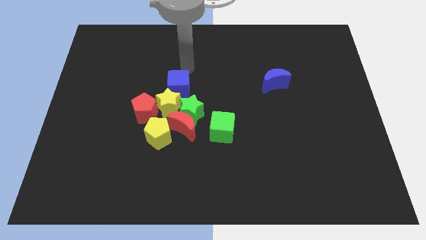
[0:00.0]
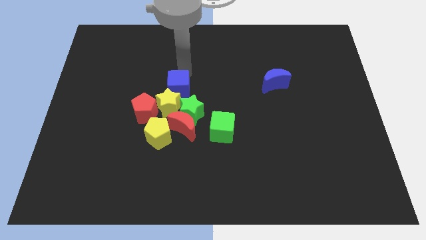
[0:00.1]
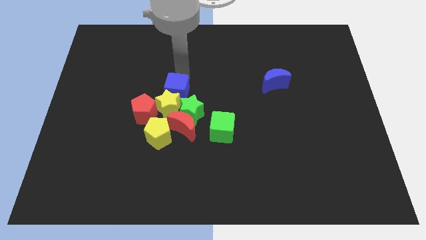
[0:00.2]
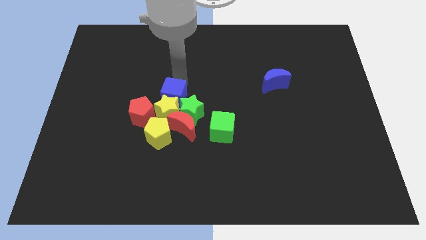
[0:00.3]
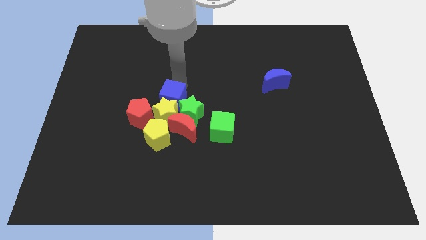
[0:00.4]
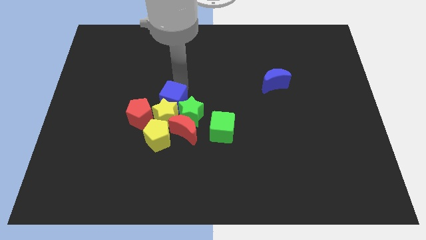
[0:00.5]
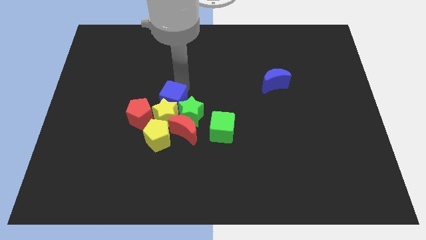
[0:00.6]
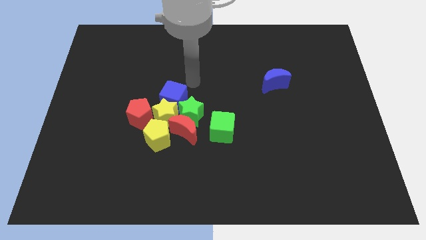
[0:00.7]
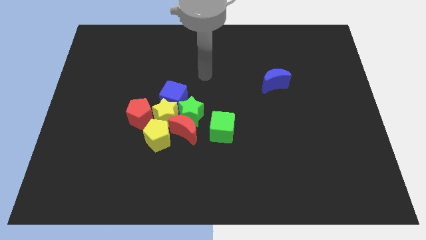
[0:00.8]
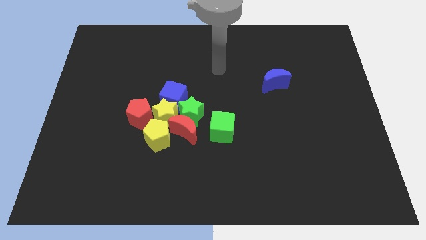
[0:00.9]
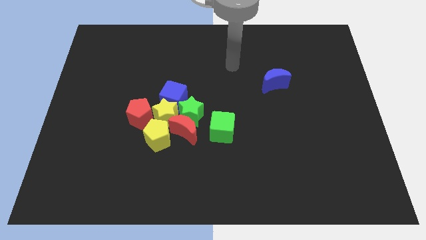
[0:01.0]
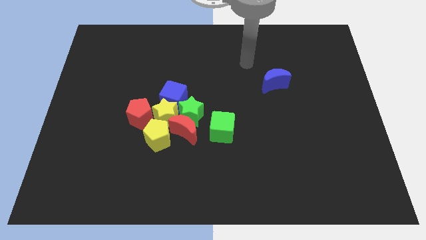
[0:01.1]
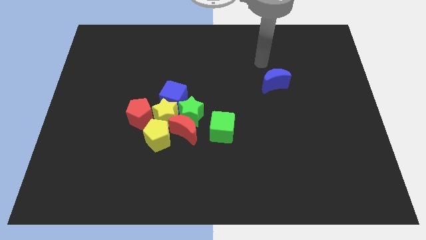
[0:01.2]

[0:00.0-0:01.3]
push the blue cube into the yellow star

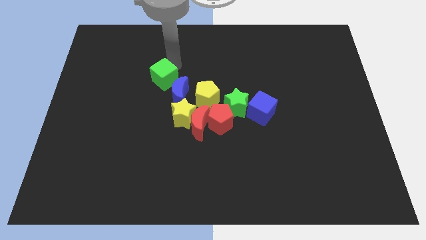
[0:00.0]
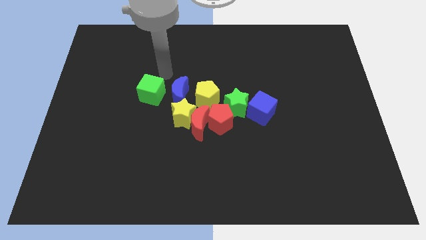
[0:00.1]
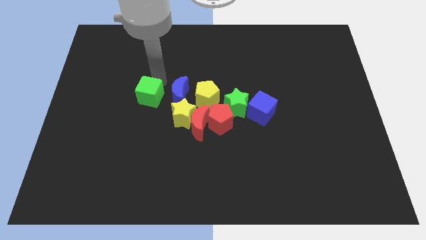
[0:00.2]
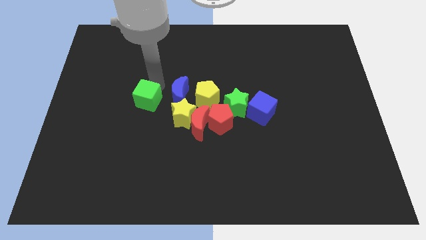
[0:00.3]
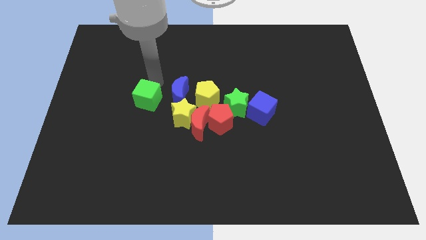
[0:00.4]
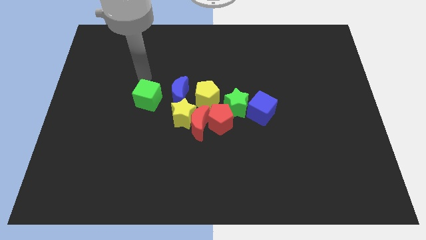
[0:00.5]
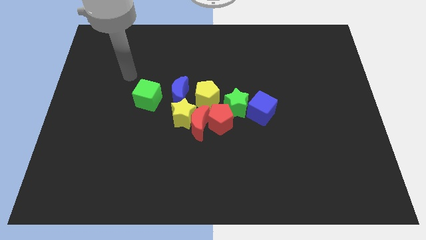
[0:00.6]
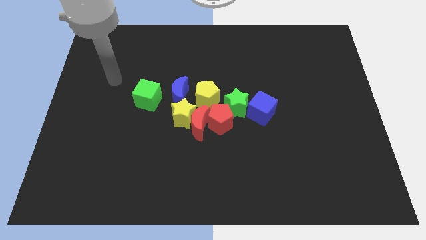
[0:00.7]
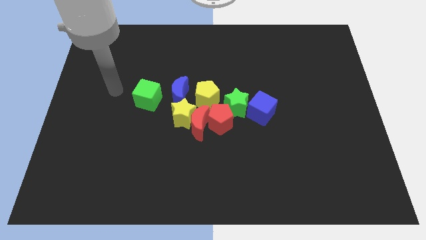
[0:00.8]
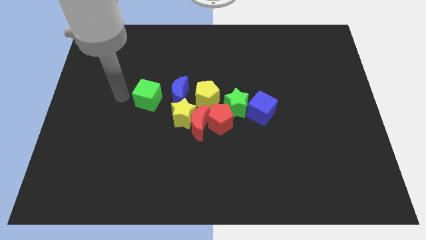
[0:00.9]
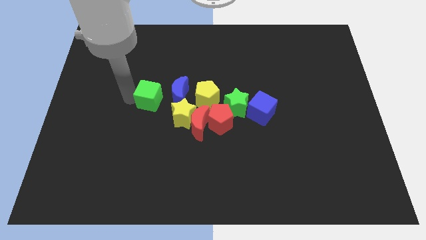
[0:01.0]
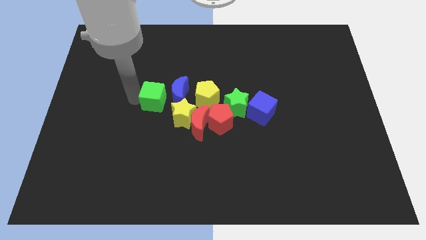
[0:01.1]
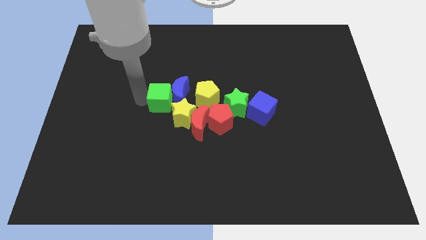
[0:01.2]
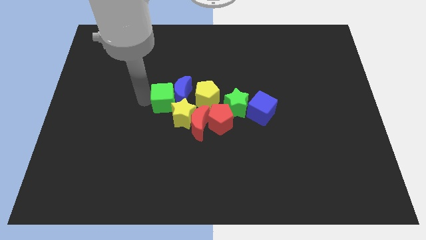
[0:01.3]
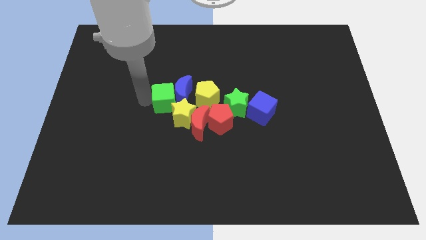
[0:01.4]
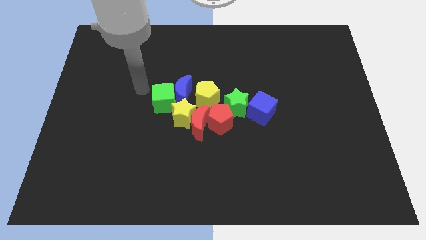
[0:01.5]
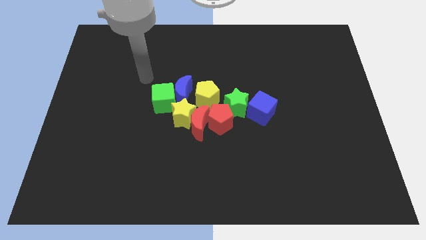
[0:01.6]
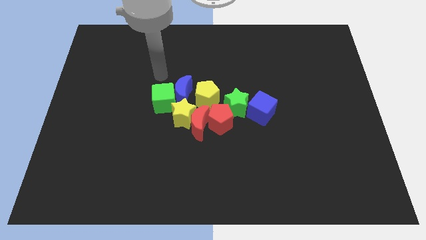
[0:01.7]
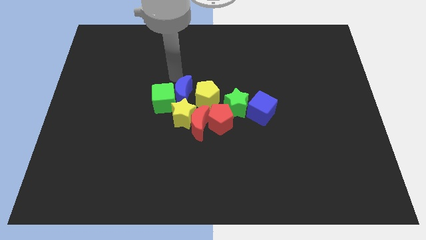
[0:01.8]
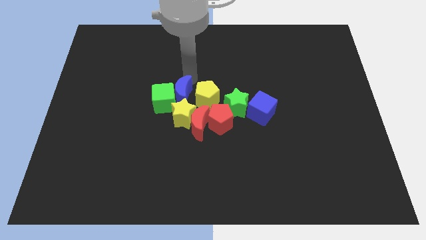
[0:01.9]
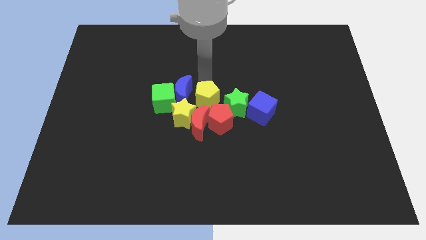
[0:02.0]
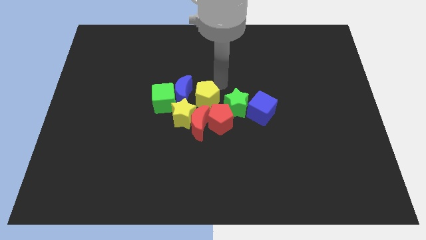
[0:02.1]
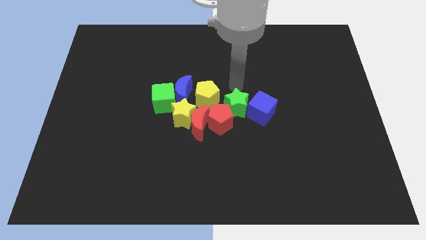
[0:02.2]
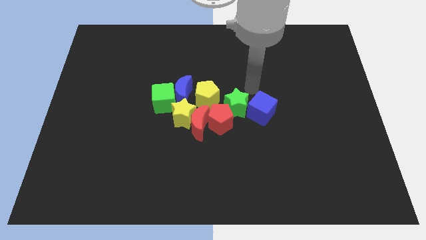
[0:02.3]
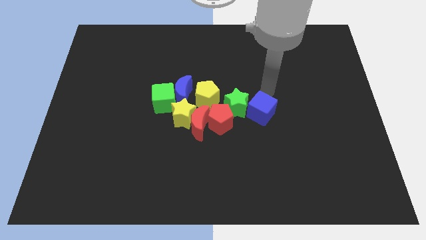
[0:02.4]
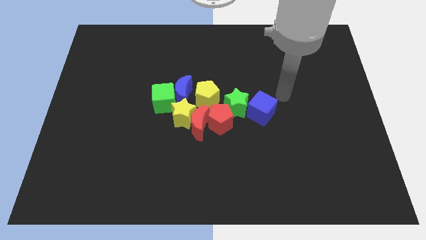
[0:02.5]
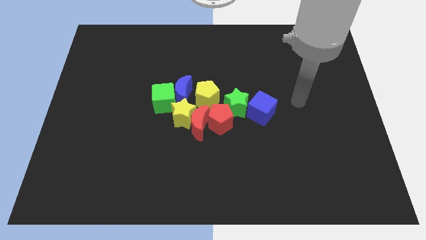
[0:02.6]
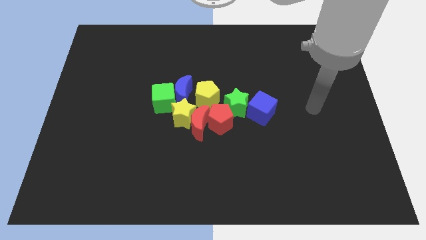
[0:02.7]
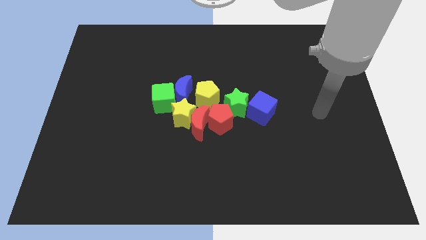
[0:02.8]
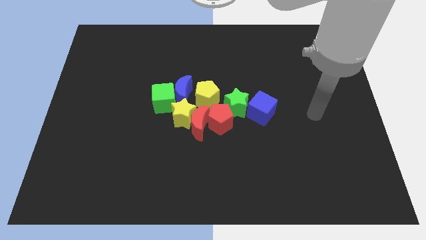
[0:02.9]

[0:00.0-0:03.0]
push the green cube into blue moon

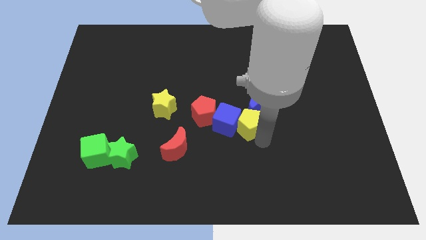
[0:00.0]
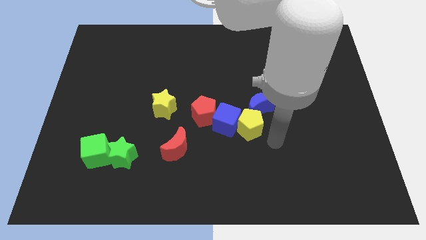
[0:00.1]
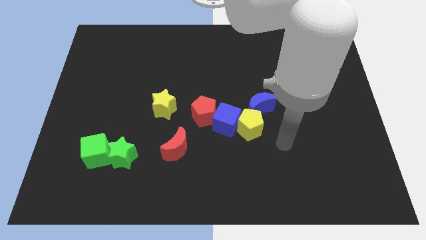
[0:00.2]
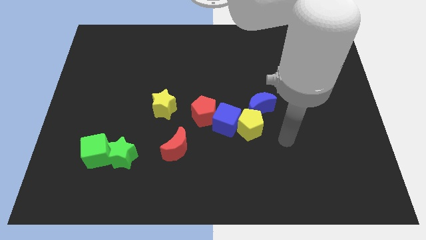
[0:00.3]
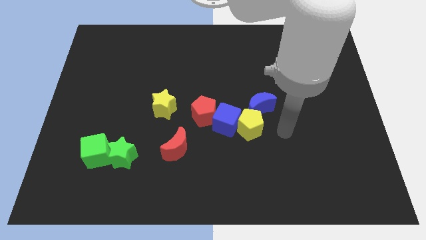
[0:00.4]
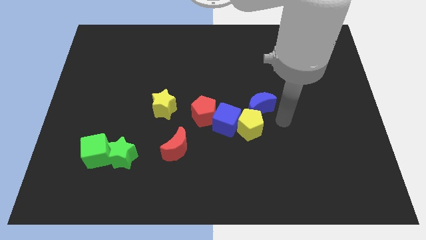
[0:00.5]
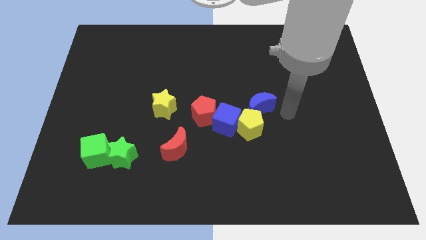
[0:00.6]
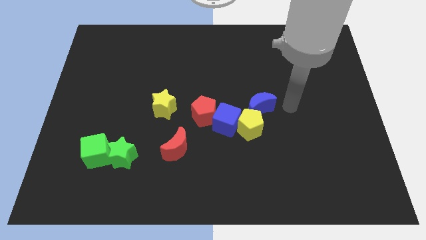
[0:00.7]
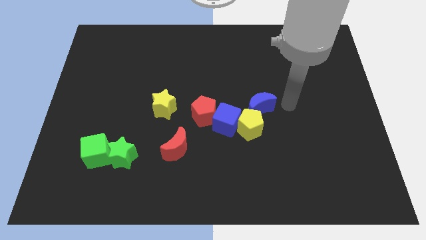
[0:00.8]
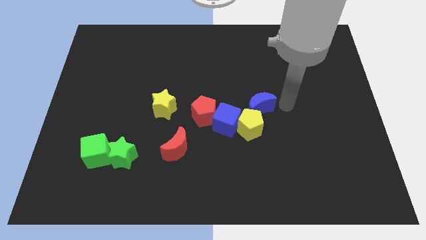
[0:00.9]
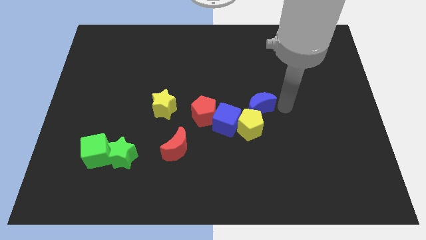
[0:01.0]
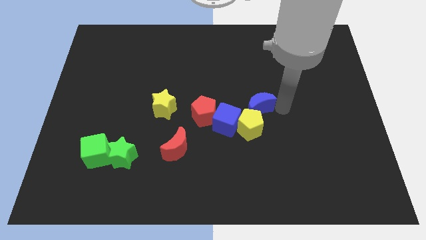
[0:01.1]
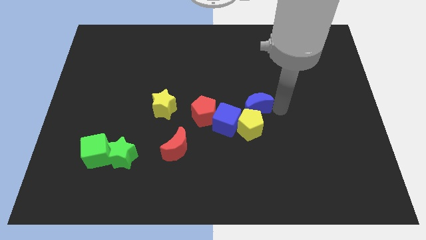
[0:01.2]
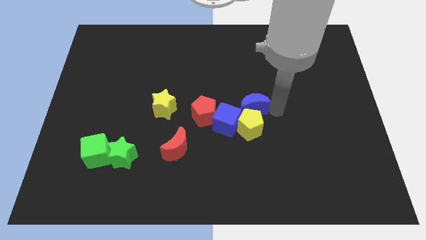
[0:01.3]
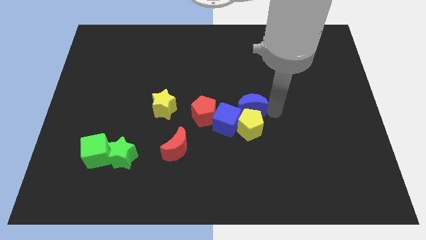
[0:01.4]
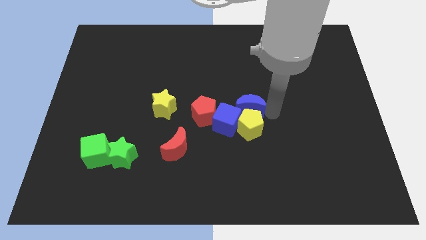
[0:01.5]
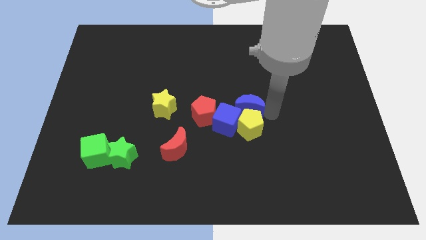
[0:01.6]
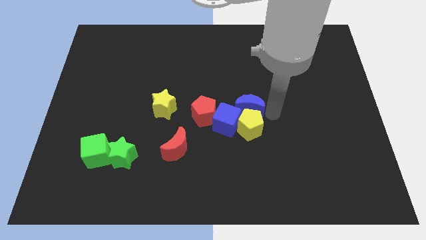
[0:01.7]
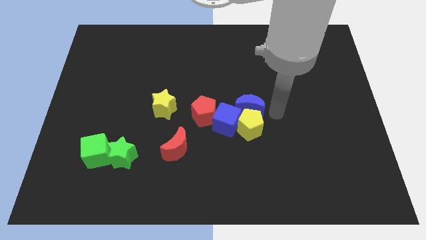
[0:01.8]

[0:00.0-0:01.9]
move the blue moon above the yellow pentagon

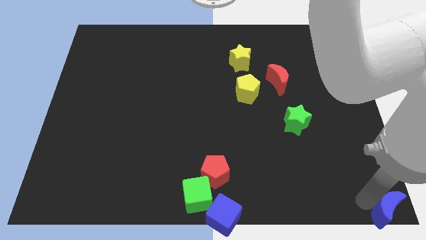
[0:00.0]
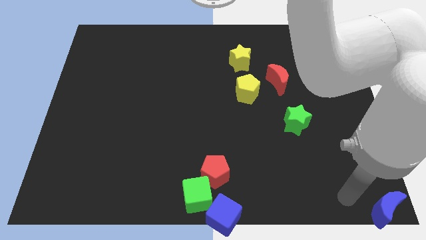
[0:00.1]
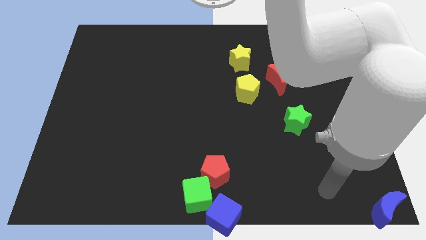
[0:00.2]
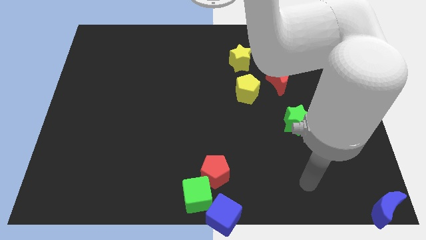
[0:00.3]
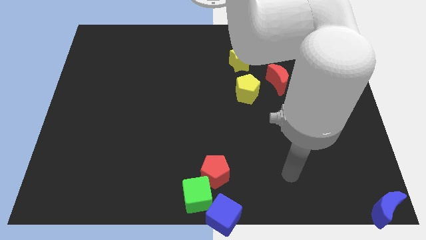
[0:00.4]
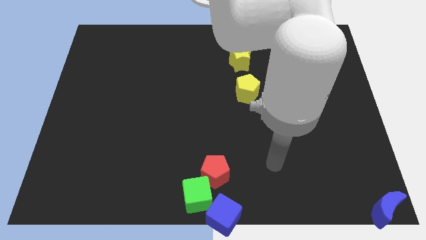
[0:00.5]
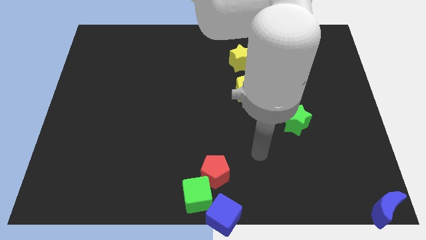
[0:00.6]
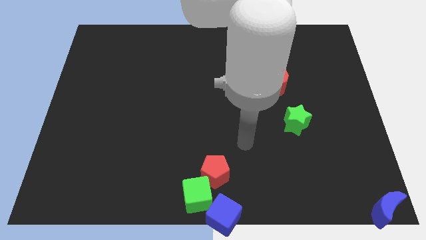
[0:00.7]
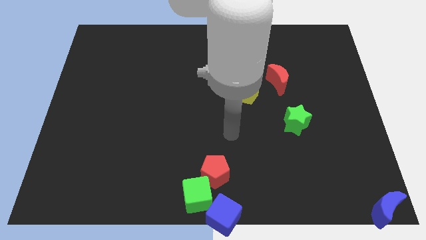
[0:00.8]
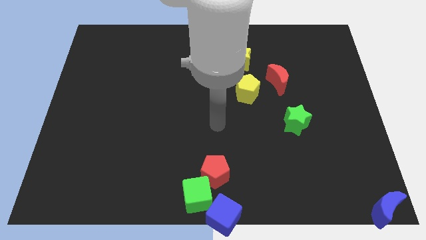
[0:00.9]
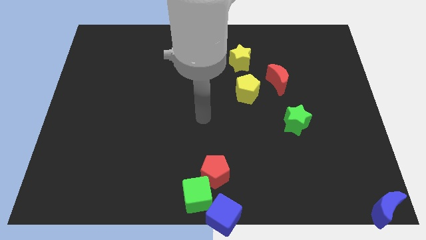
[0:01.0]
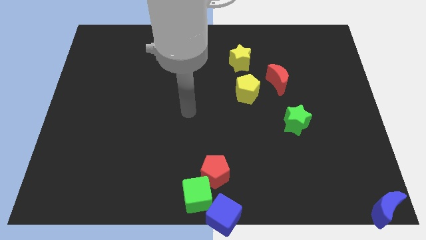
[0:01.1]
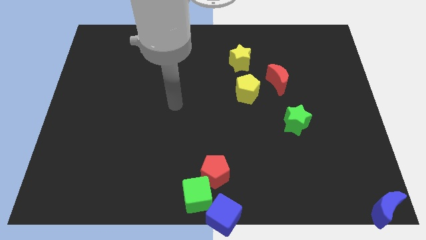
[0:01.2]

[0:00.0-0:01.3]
move your arm away from the blue crescent

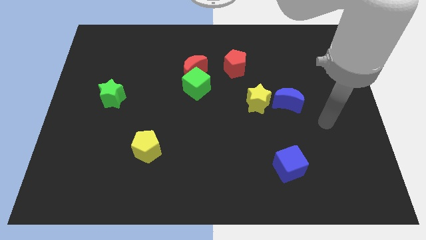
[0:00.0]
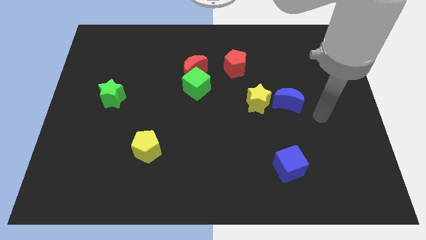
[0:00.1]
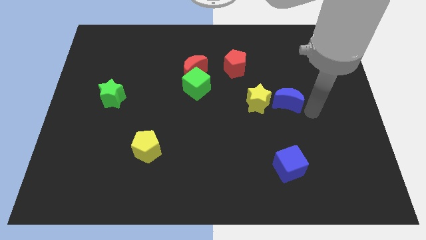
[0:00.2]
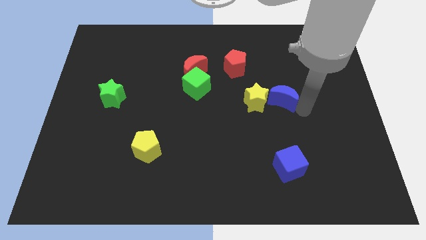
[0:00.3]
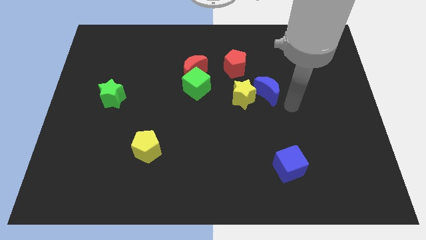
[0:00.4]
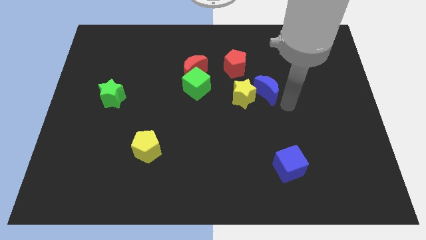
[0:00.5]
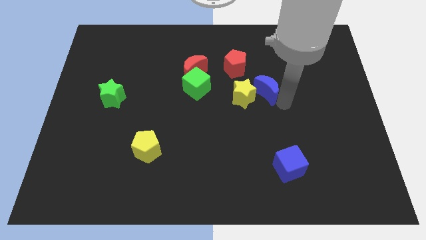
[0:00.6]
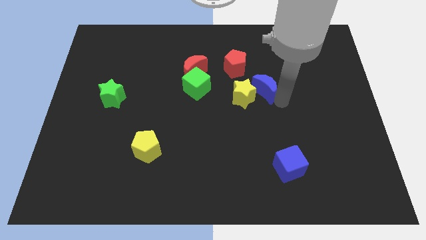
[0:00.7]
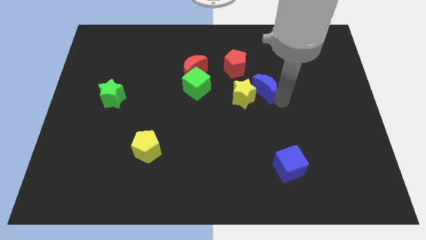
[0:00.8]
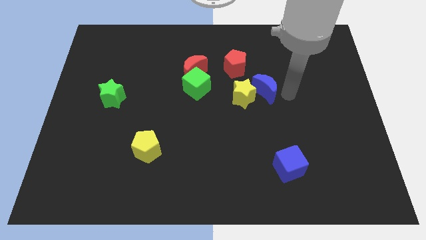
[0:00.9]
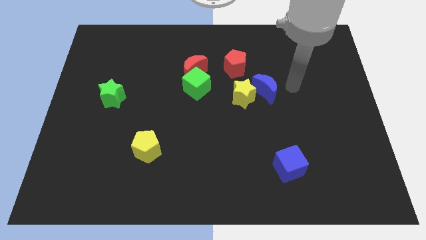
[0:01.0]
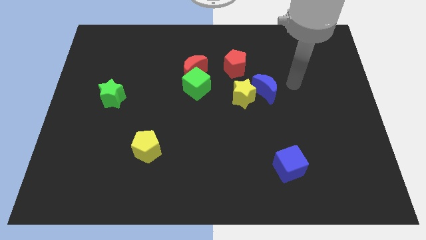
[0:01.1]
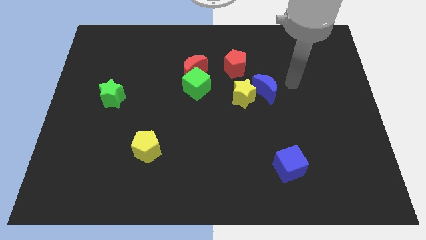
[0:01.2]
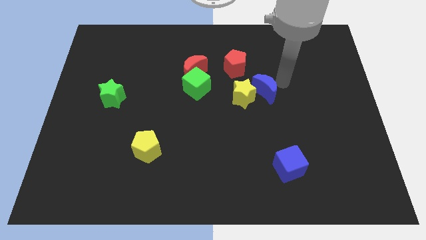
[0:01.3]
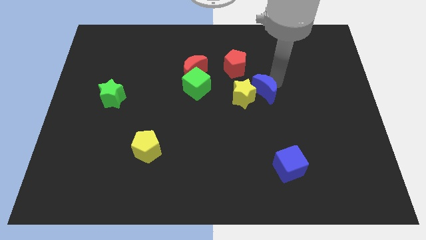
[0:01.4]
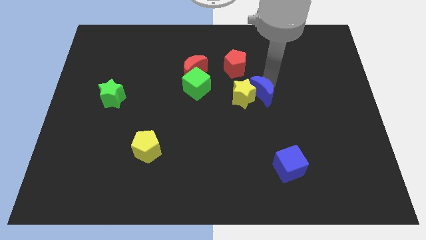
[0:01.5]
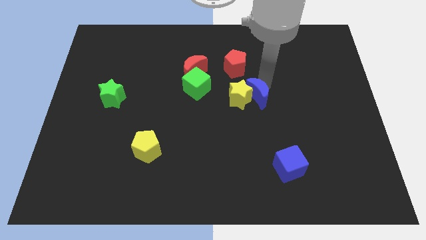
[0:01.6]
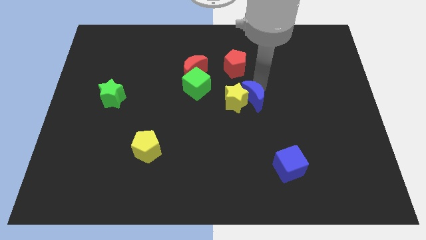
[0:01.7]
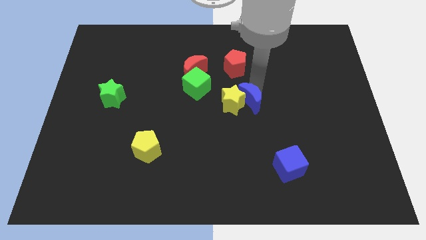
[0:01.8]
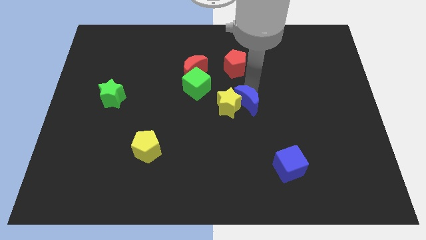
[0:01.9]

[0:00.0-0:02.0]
push the blue moon into the yellow star
